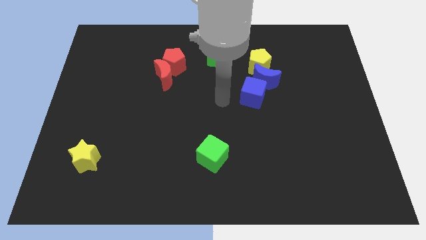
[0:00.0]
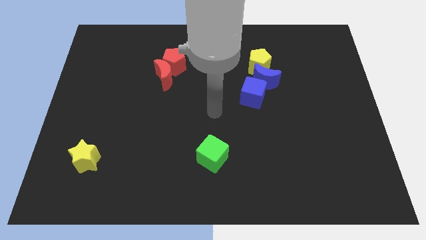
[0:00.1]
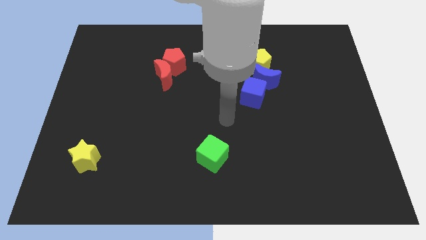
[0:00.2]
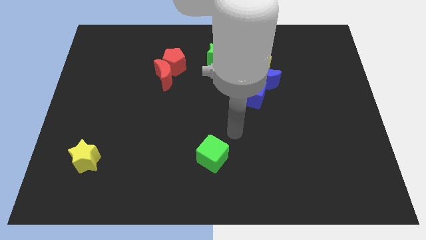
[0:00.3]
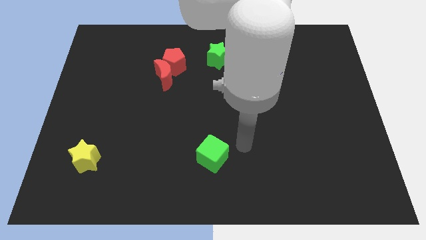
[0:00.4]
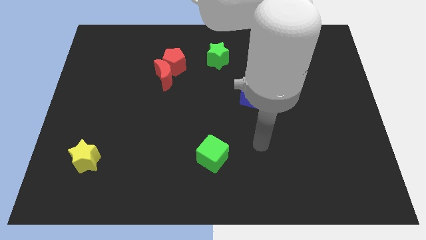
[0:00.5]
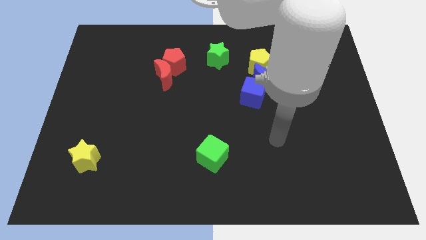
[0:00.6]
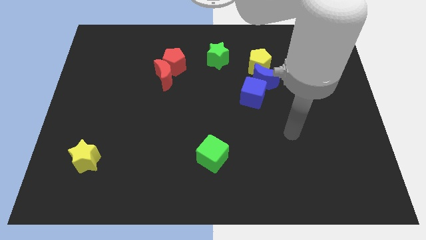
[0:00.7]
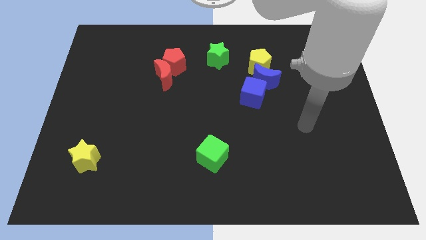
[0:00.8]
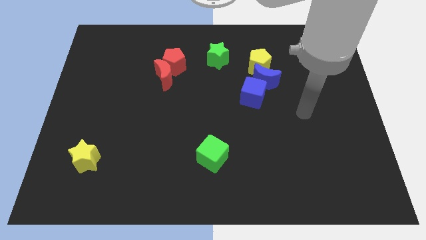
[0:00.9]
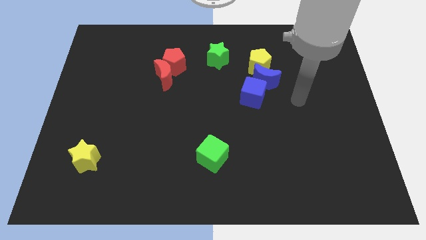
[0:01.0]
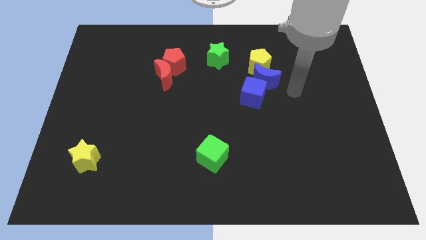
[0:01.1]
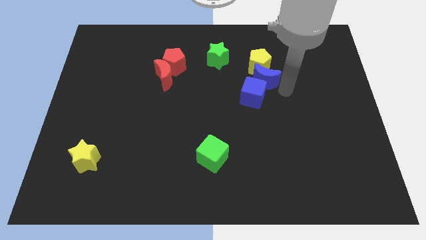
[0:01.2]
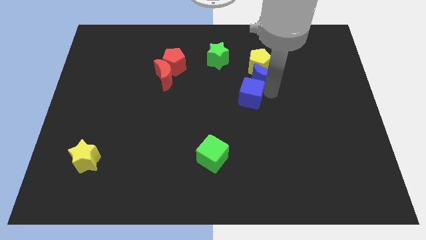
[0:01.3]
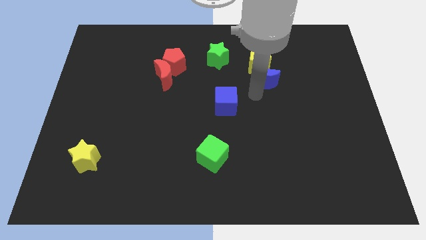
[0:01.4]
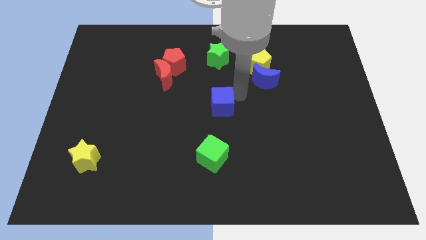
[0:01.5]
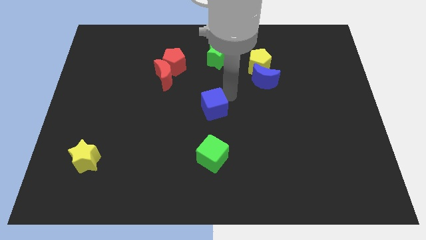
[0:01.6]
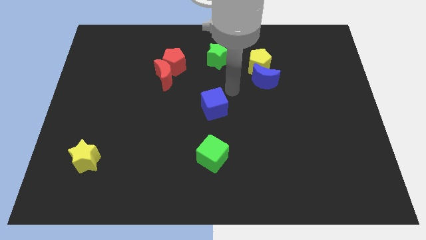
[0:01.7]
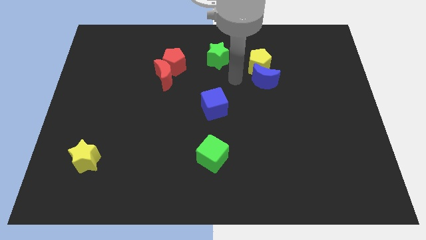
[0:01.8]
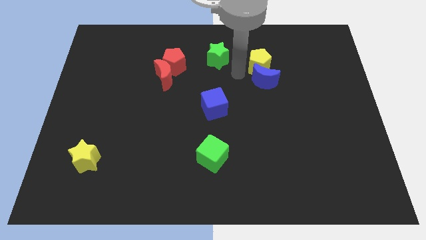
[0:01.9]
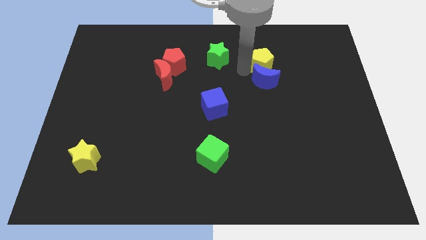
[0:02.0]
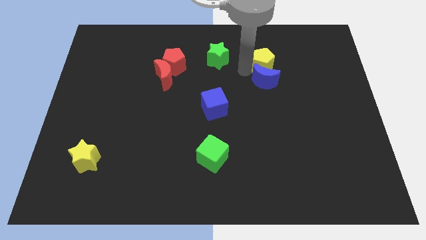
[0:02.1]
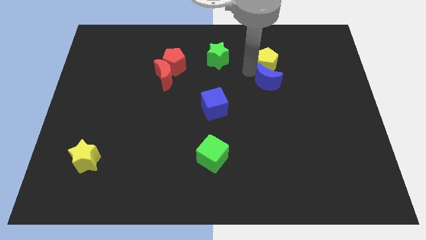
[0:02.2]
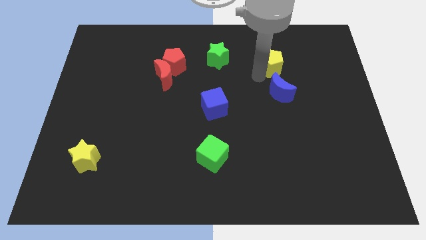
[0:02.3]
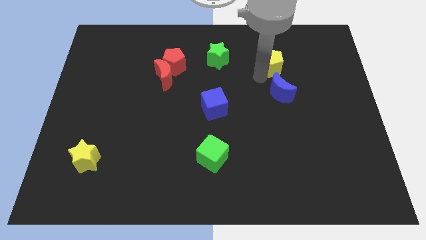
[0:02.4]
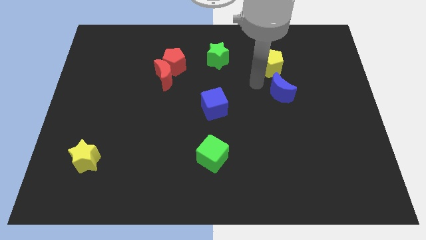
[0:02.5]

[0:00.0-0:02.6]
slightly move the yellow pentagon towards the right

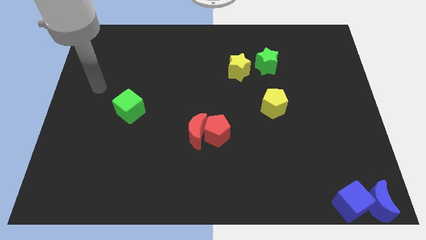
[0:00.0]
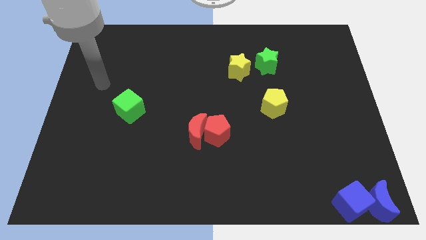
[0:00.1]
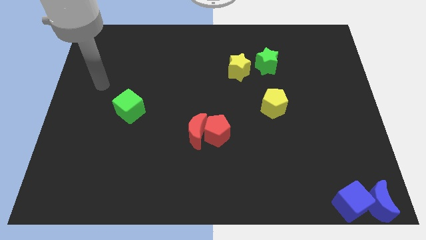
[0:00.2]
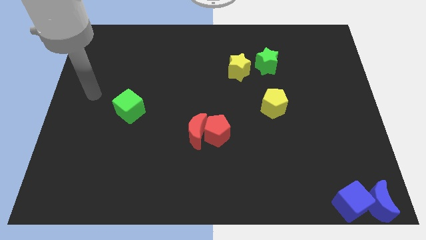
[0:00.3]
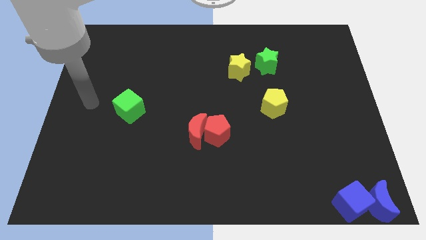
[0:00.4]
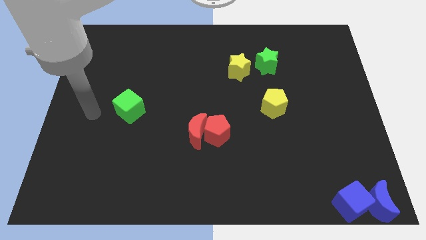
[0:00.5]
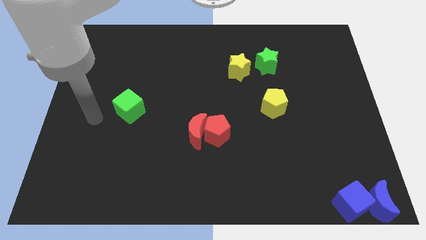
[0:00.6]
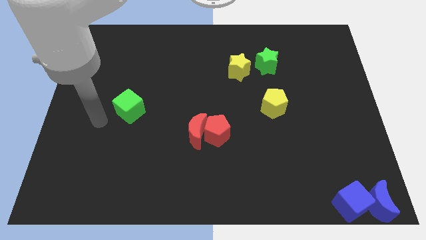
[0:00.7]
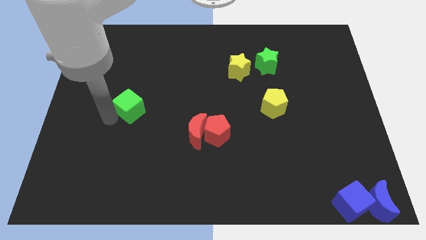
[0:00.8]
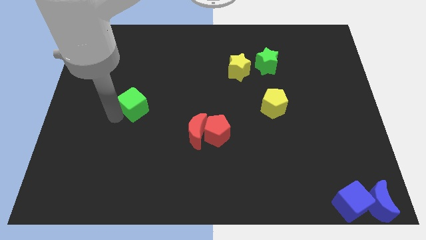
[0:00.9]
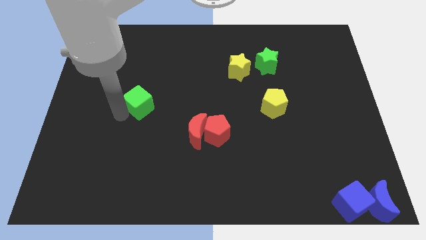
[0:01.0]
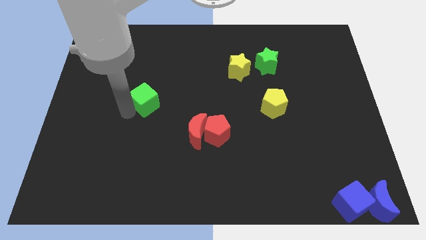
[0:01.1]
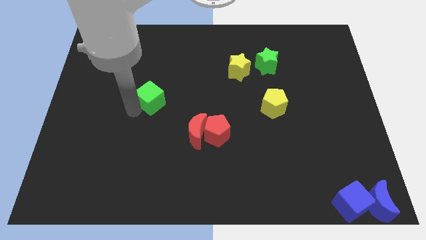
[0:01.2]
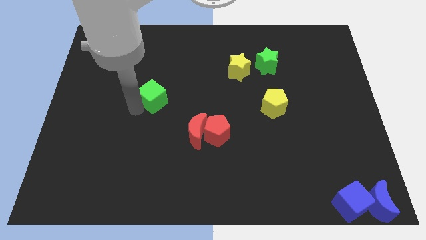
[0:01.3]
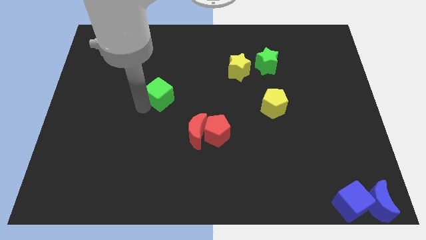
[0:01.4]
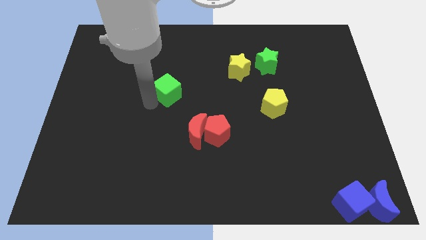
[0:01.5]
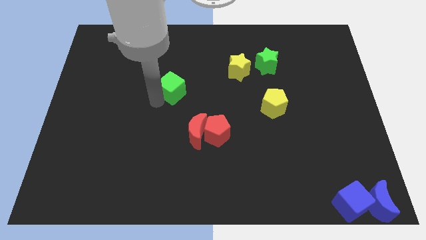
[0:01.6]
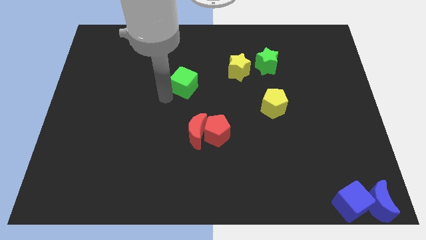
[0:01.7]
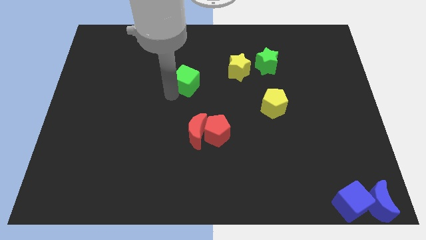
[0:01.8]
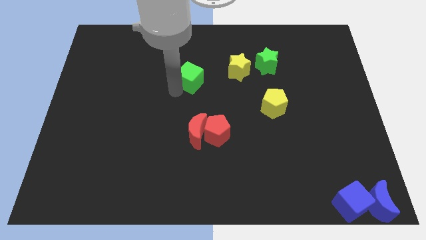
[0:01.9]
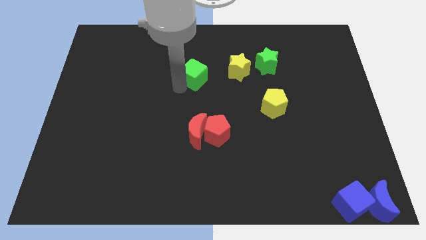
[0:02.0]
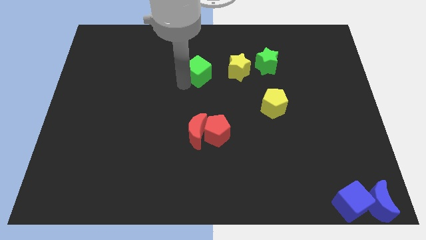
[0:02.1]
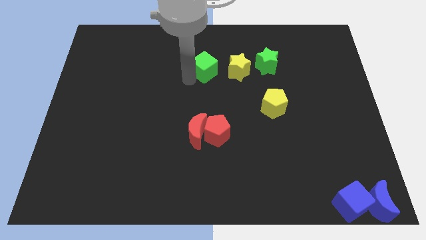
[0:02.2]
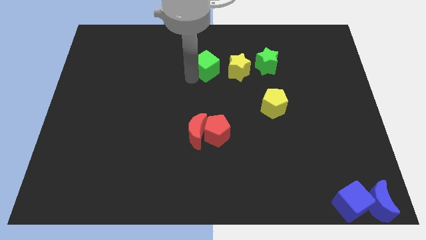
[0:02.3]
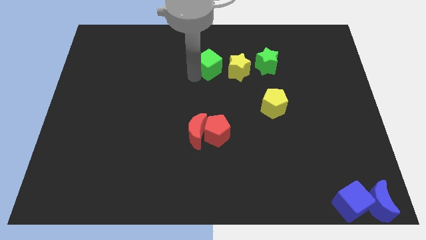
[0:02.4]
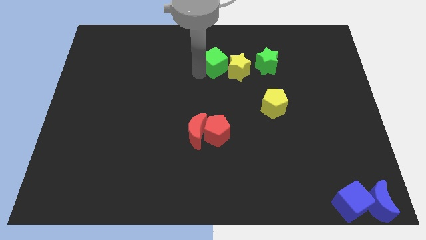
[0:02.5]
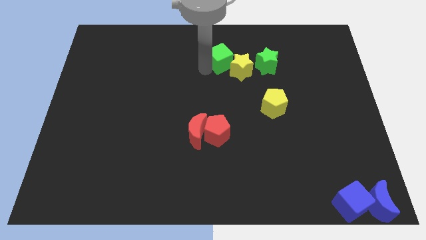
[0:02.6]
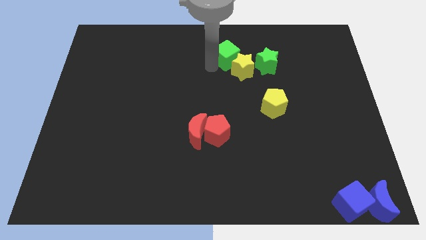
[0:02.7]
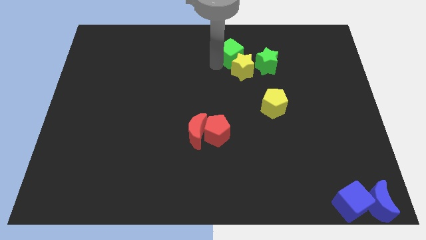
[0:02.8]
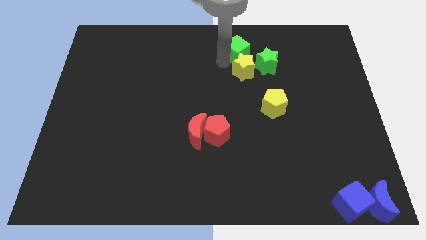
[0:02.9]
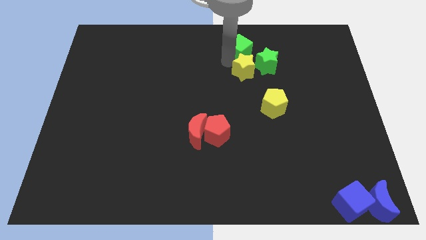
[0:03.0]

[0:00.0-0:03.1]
push green cube above yellow star

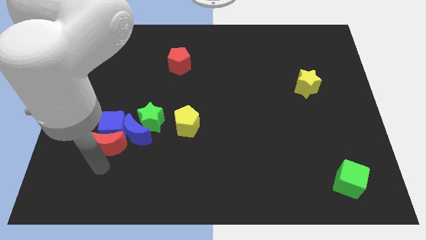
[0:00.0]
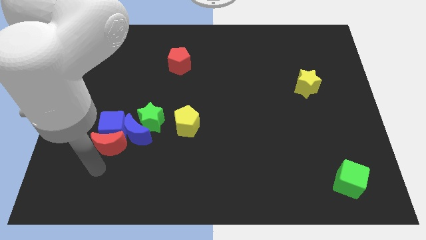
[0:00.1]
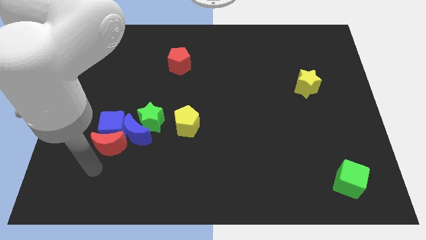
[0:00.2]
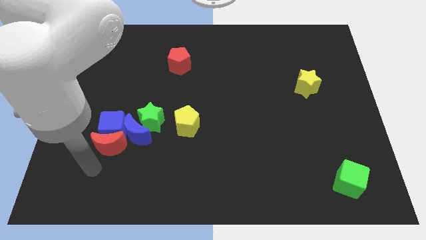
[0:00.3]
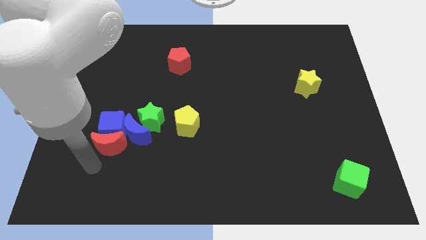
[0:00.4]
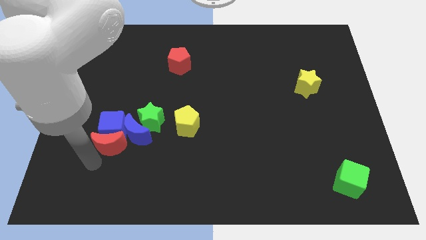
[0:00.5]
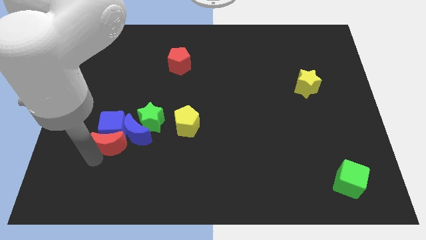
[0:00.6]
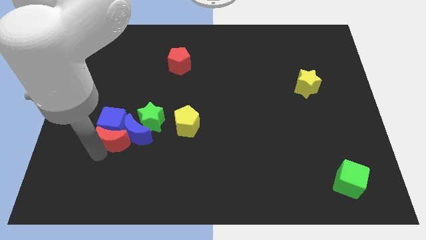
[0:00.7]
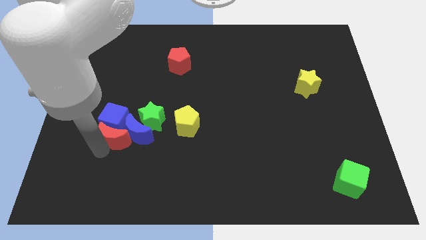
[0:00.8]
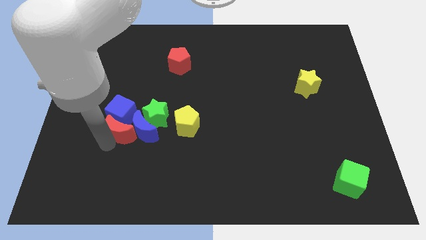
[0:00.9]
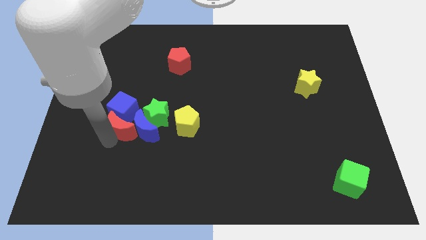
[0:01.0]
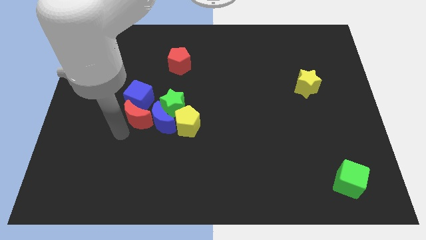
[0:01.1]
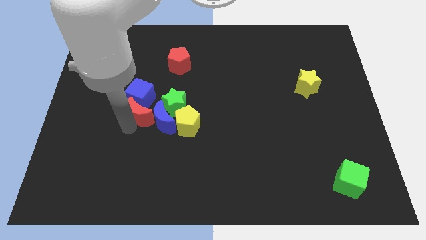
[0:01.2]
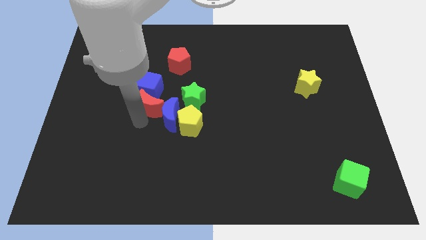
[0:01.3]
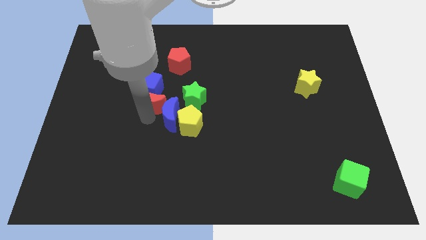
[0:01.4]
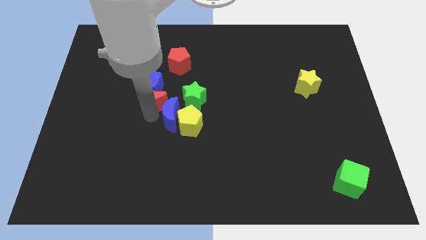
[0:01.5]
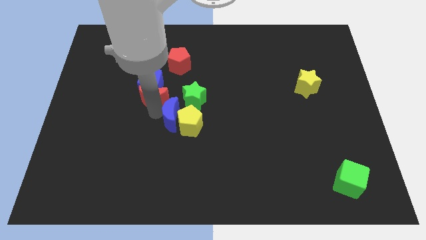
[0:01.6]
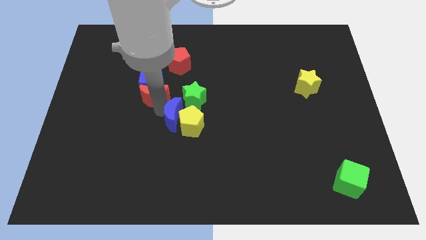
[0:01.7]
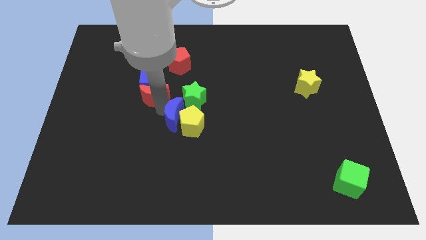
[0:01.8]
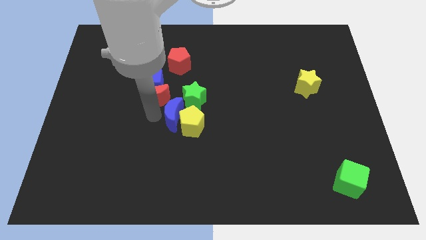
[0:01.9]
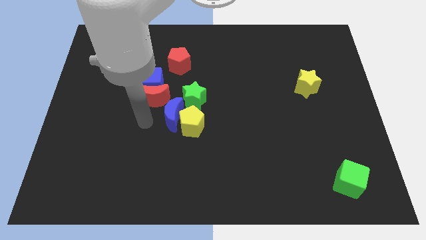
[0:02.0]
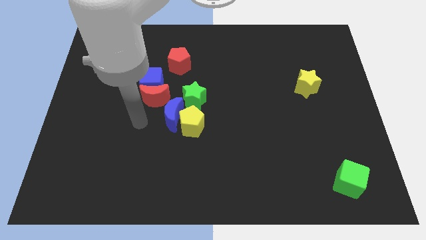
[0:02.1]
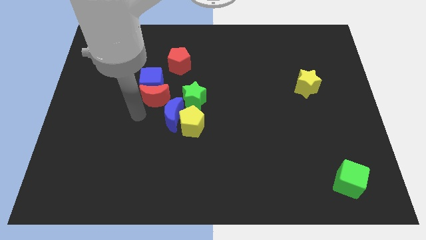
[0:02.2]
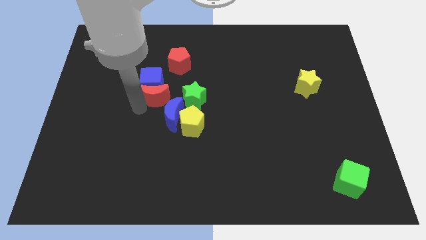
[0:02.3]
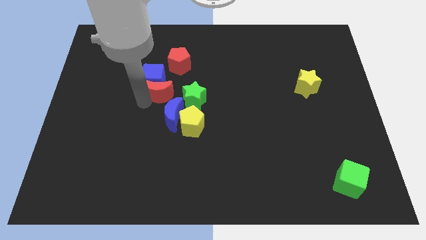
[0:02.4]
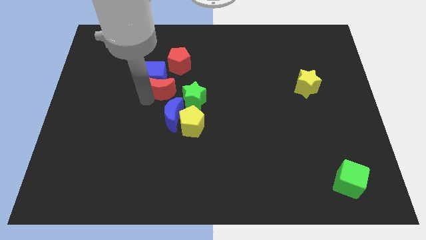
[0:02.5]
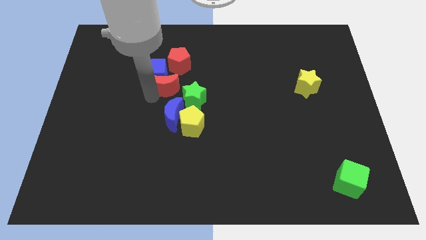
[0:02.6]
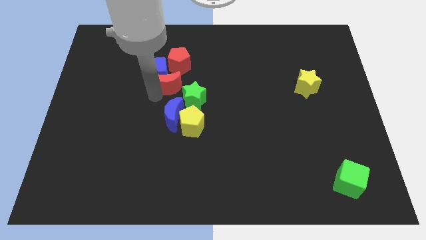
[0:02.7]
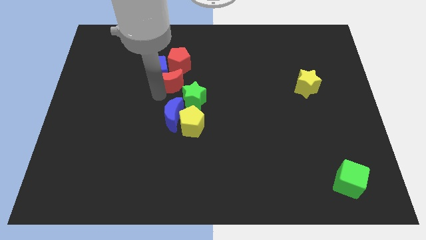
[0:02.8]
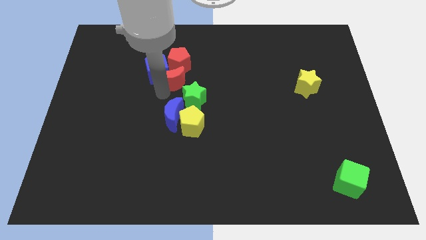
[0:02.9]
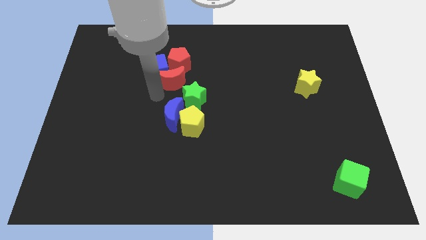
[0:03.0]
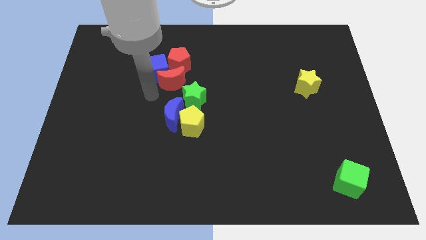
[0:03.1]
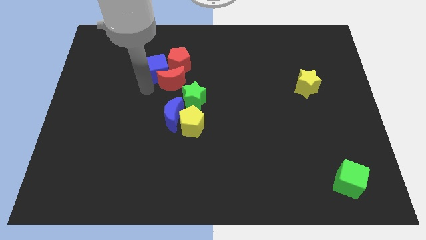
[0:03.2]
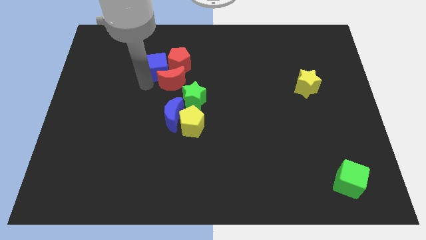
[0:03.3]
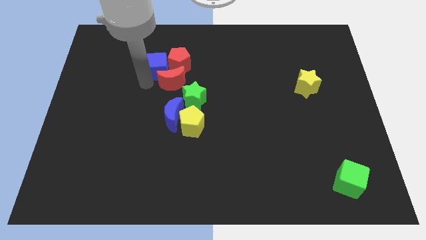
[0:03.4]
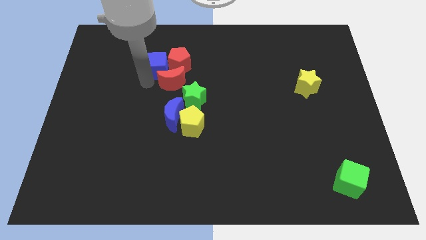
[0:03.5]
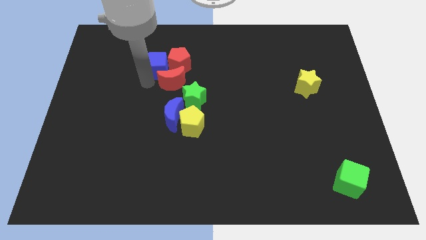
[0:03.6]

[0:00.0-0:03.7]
place the blue cube left to the red pentagon
